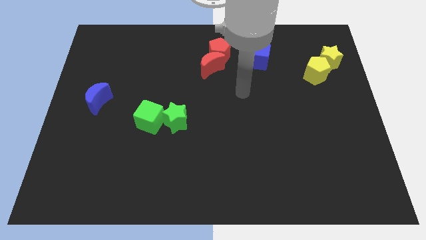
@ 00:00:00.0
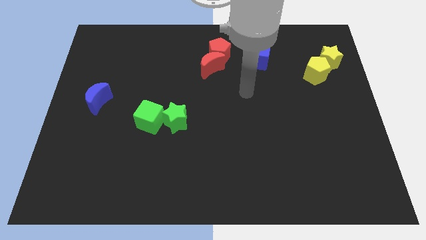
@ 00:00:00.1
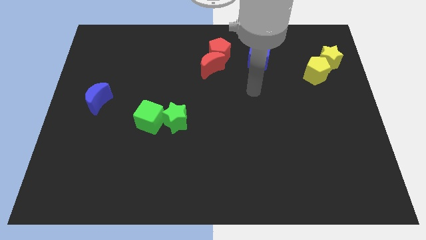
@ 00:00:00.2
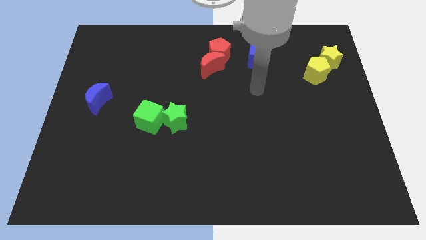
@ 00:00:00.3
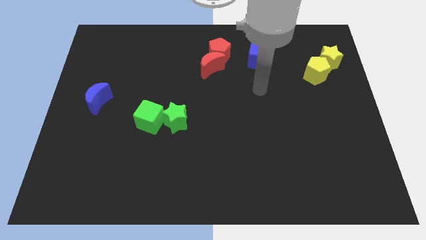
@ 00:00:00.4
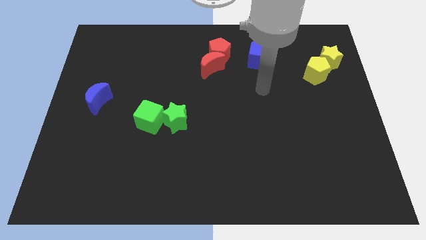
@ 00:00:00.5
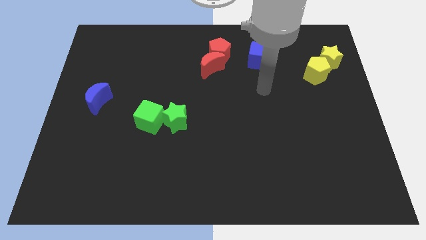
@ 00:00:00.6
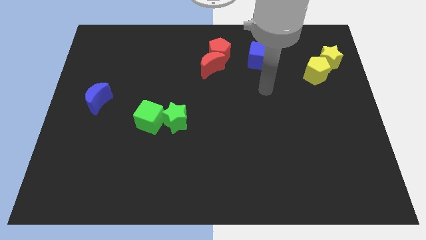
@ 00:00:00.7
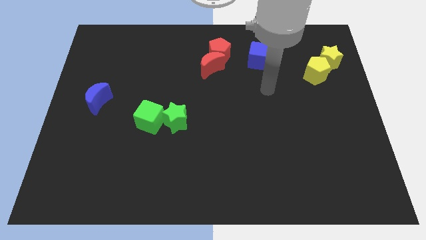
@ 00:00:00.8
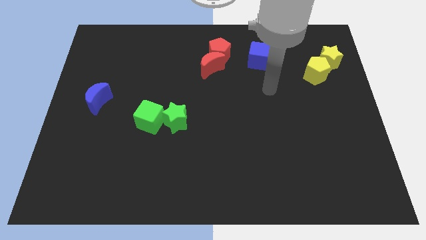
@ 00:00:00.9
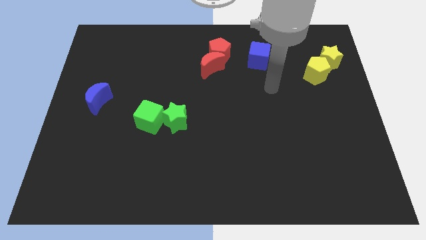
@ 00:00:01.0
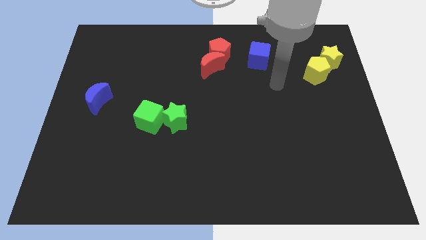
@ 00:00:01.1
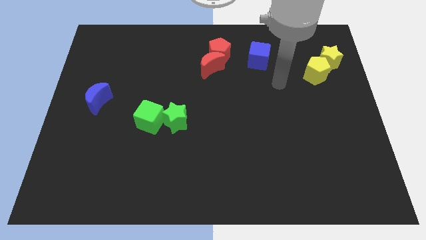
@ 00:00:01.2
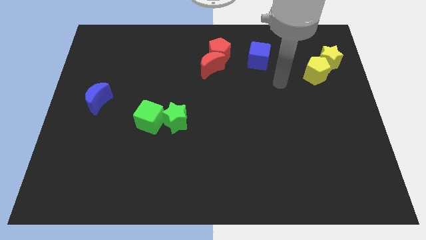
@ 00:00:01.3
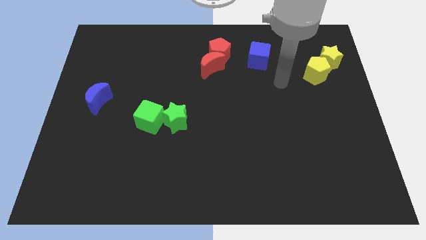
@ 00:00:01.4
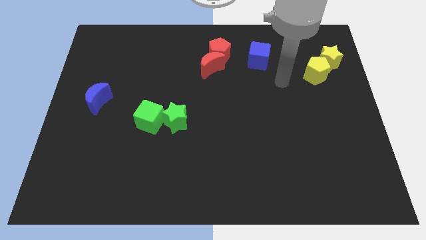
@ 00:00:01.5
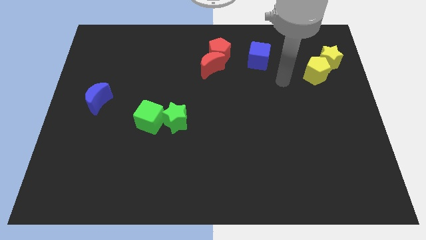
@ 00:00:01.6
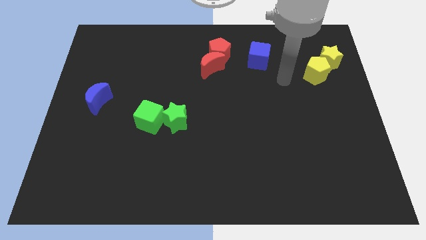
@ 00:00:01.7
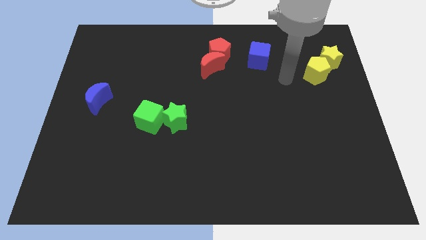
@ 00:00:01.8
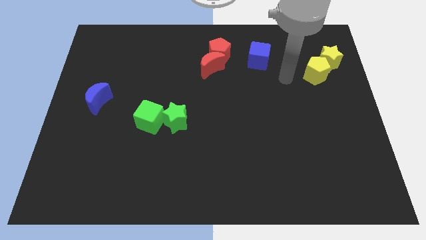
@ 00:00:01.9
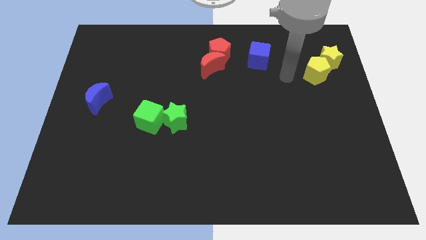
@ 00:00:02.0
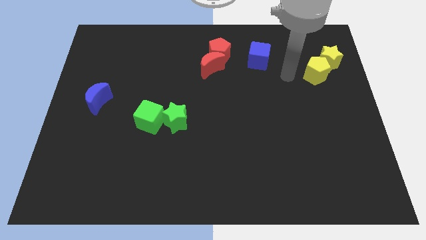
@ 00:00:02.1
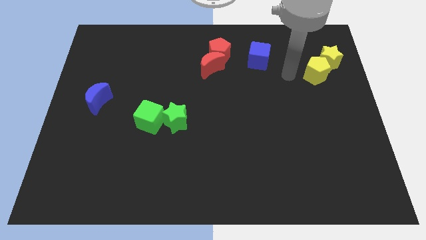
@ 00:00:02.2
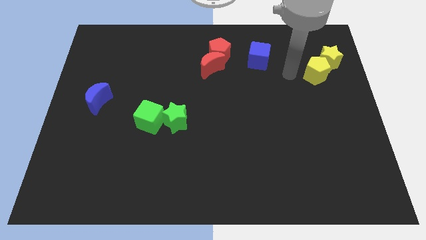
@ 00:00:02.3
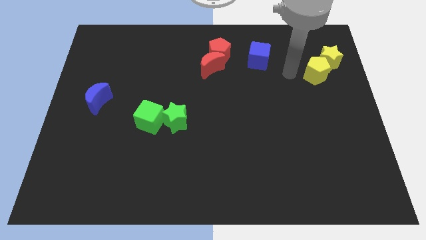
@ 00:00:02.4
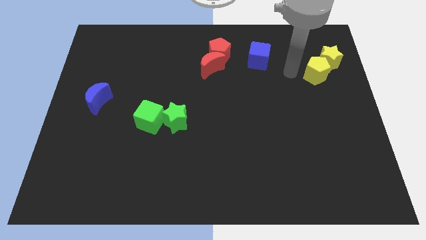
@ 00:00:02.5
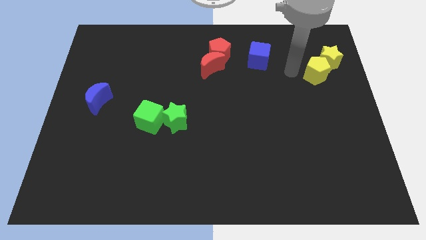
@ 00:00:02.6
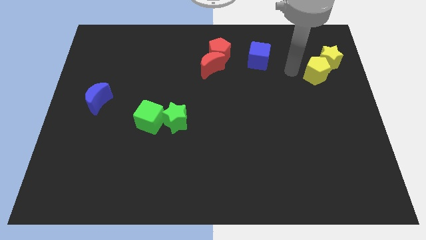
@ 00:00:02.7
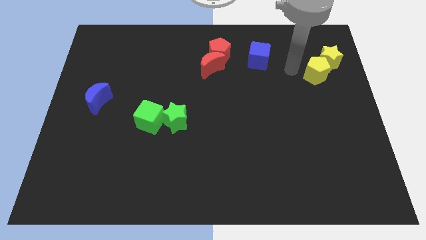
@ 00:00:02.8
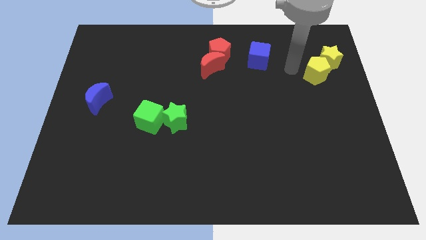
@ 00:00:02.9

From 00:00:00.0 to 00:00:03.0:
place your arm in between the yellow pentagon and blue cube

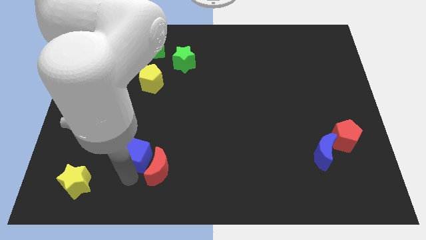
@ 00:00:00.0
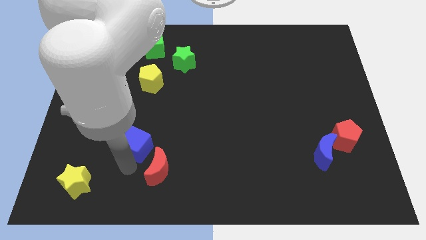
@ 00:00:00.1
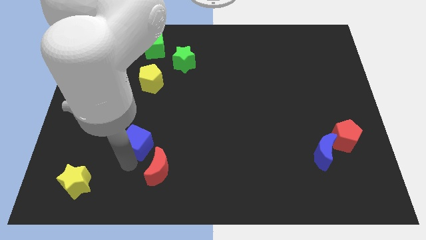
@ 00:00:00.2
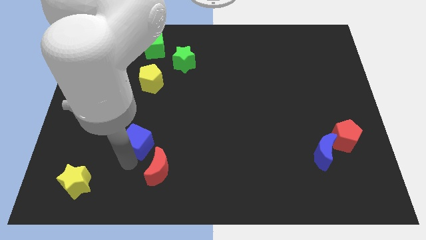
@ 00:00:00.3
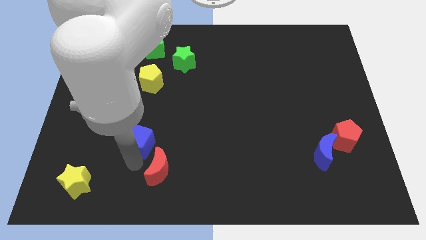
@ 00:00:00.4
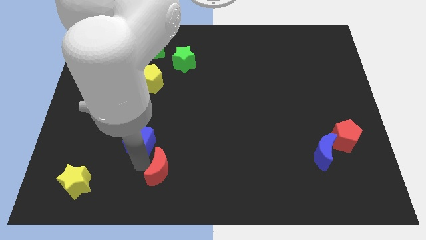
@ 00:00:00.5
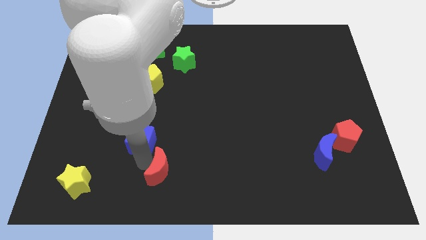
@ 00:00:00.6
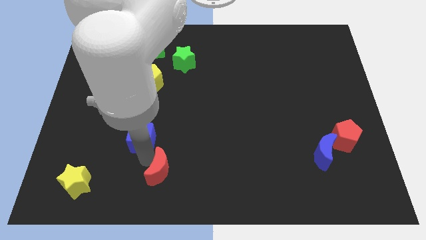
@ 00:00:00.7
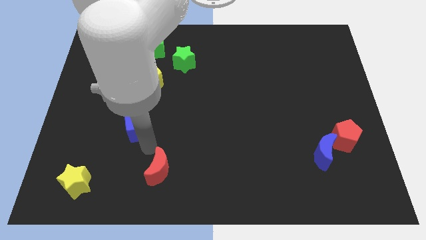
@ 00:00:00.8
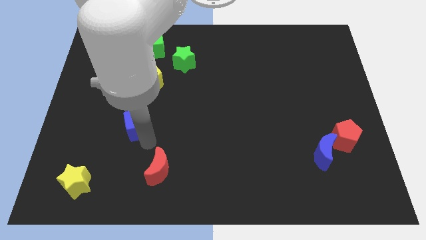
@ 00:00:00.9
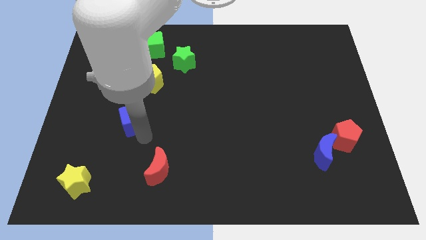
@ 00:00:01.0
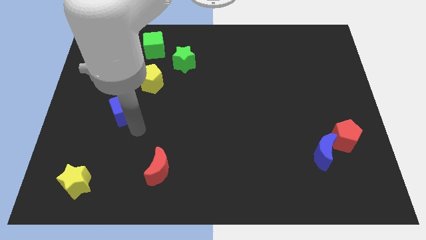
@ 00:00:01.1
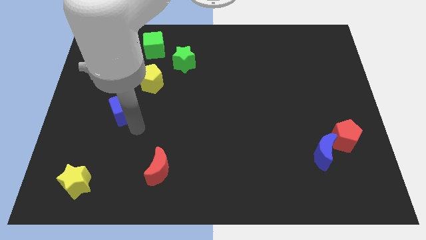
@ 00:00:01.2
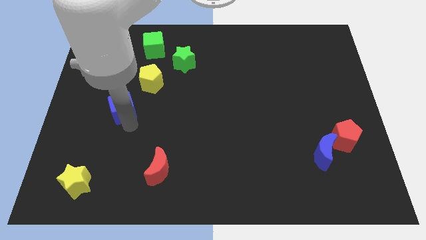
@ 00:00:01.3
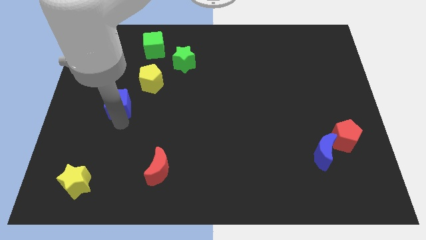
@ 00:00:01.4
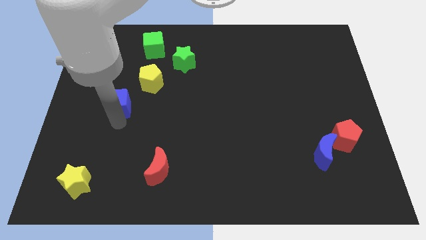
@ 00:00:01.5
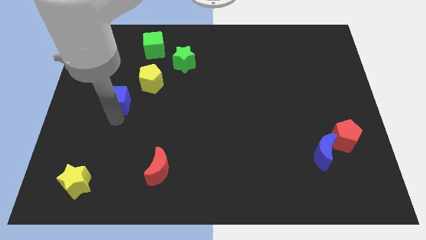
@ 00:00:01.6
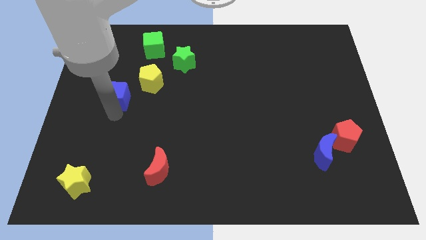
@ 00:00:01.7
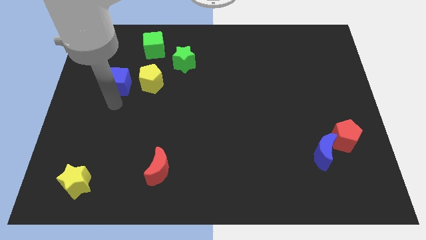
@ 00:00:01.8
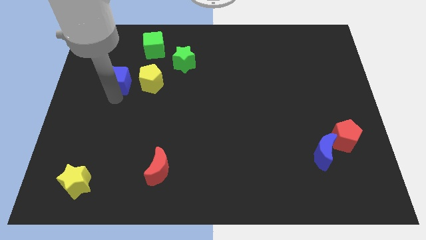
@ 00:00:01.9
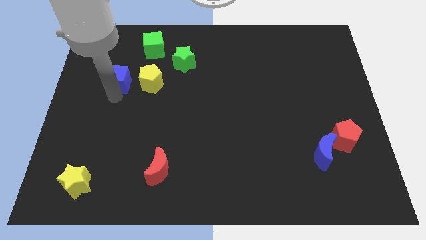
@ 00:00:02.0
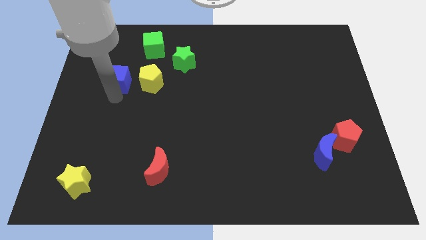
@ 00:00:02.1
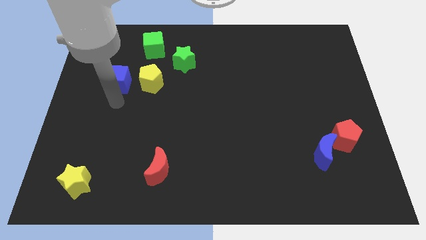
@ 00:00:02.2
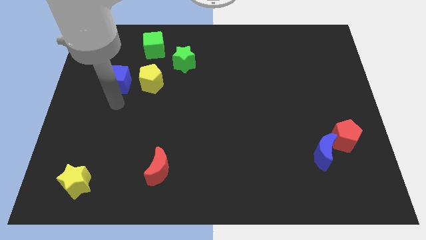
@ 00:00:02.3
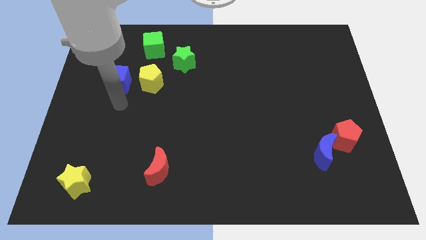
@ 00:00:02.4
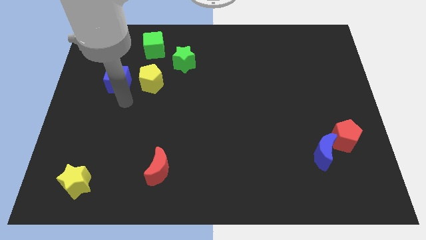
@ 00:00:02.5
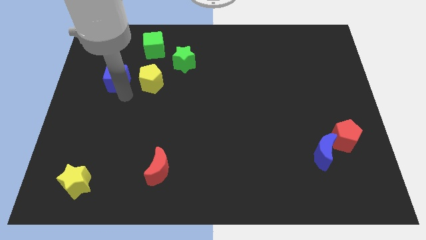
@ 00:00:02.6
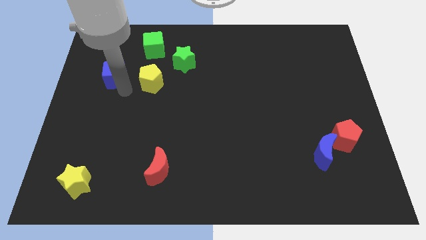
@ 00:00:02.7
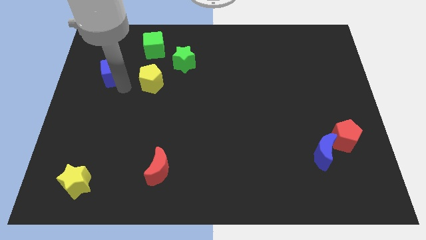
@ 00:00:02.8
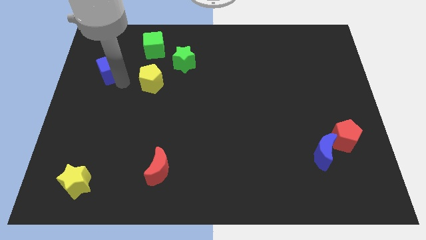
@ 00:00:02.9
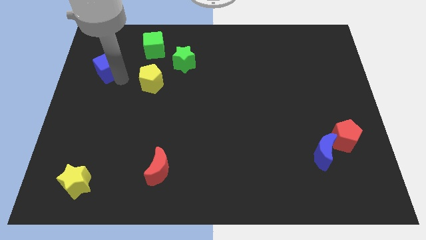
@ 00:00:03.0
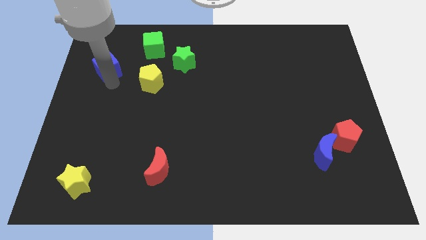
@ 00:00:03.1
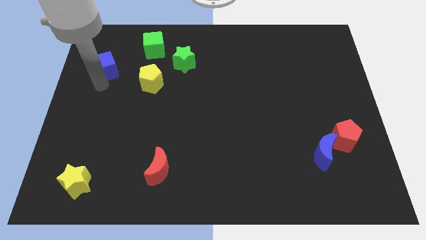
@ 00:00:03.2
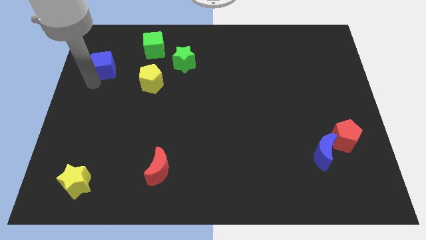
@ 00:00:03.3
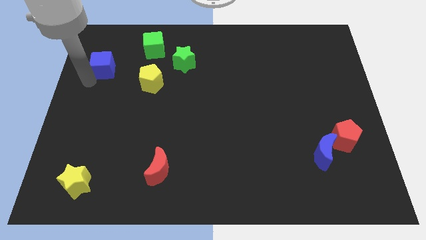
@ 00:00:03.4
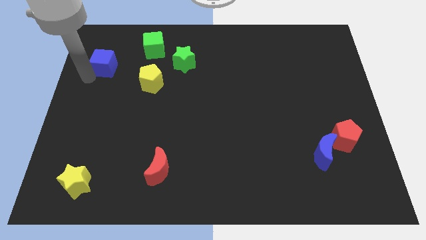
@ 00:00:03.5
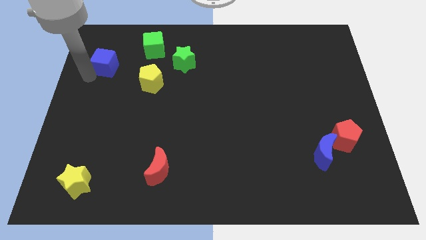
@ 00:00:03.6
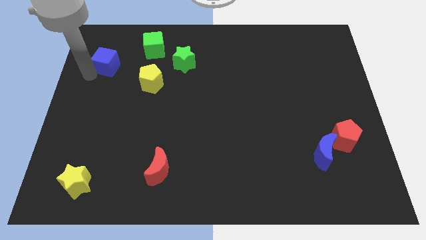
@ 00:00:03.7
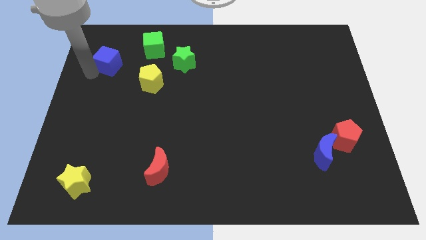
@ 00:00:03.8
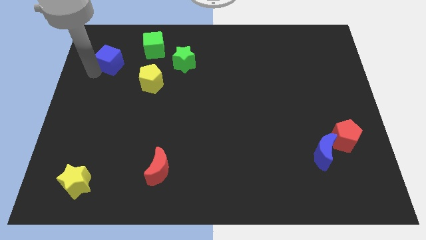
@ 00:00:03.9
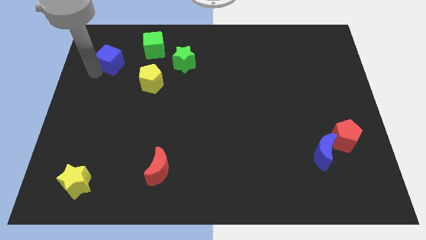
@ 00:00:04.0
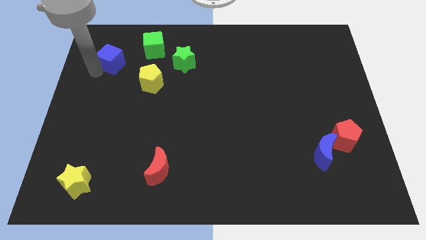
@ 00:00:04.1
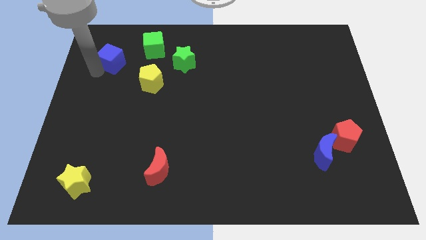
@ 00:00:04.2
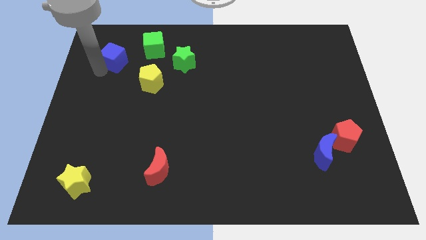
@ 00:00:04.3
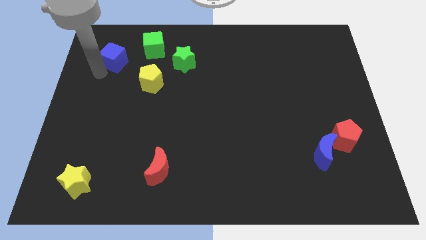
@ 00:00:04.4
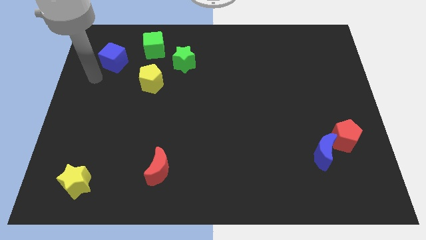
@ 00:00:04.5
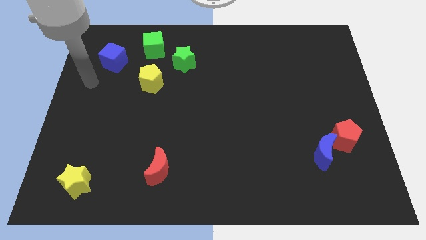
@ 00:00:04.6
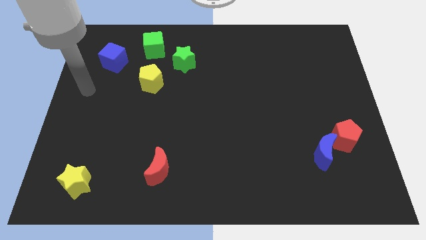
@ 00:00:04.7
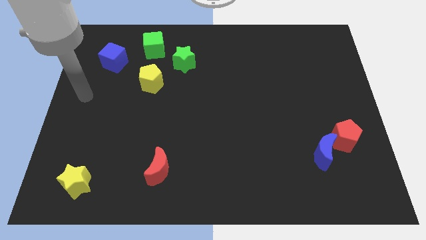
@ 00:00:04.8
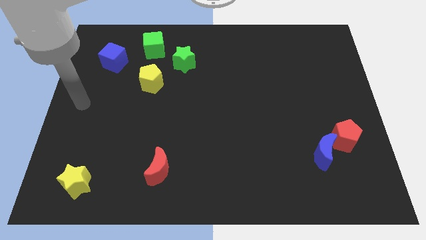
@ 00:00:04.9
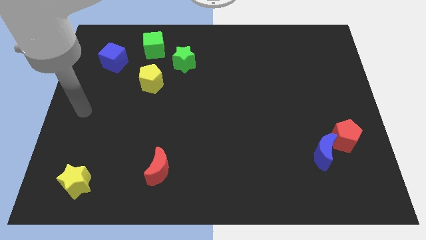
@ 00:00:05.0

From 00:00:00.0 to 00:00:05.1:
place blue cube parallel to green star

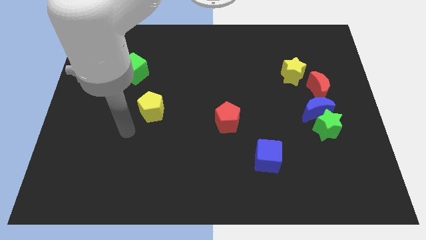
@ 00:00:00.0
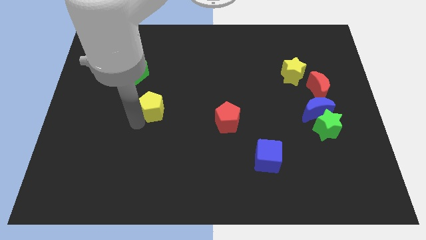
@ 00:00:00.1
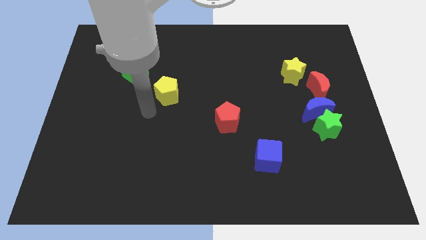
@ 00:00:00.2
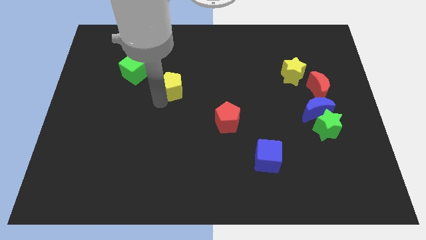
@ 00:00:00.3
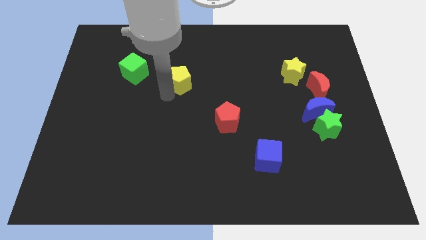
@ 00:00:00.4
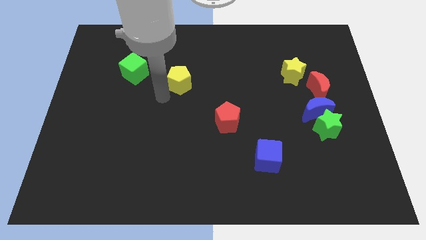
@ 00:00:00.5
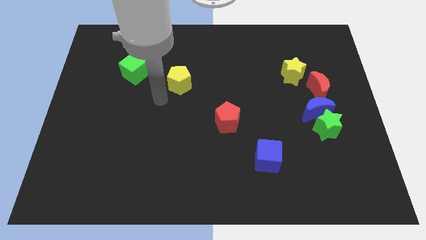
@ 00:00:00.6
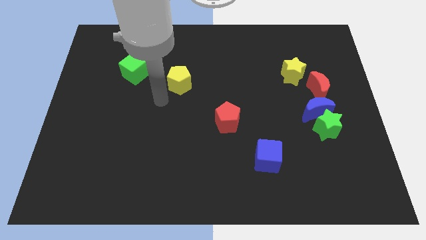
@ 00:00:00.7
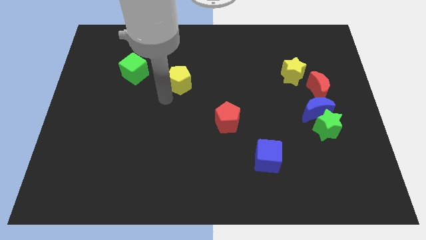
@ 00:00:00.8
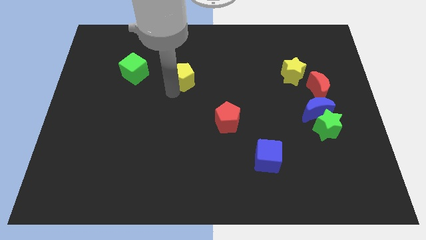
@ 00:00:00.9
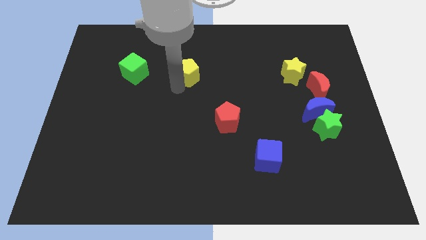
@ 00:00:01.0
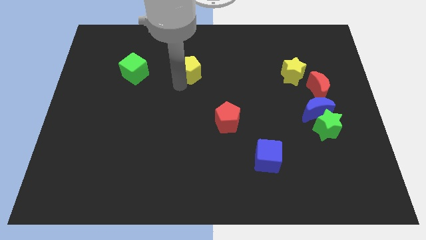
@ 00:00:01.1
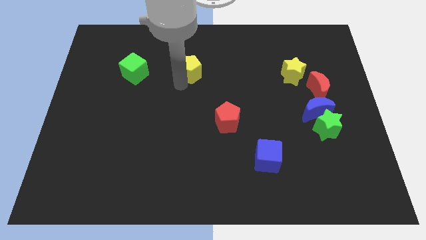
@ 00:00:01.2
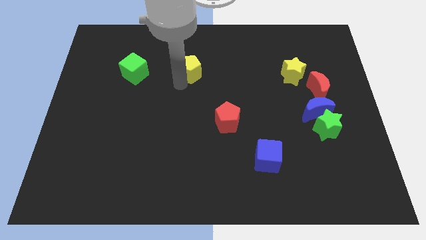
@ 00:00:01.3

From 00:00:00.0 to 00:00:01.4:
move the yellow pentagon to the top center of the board
